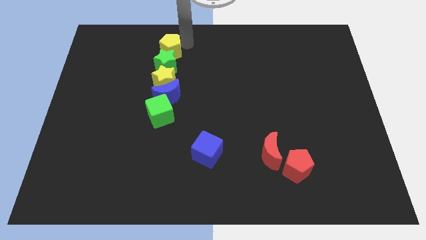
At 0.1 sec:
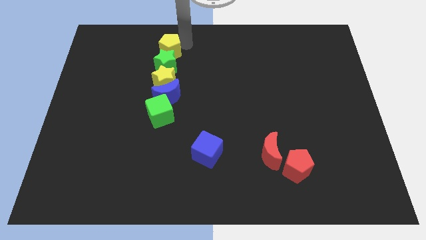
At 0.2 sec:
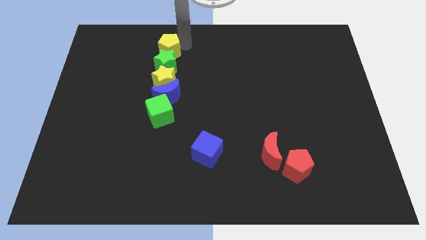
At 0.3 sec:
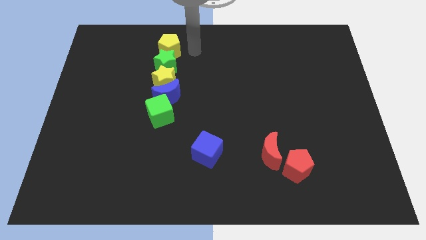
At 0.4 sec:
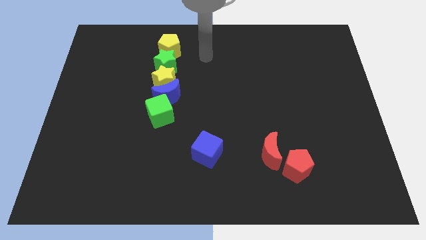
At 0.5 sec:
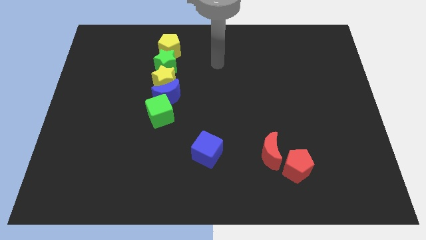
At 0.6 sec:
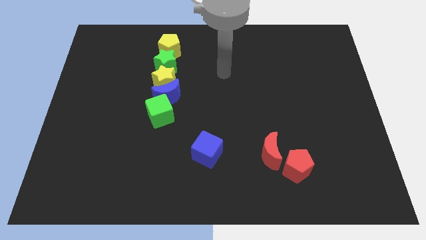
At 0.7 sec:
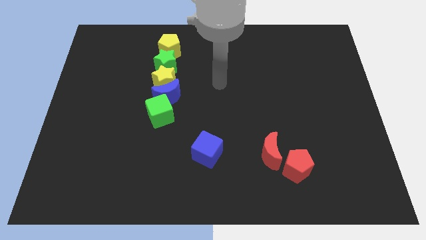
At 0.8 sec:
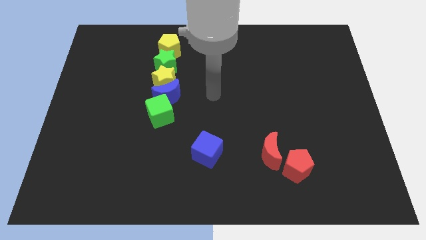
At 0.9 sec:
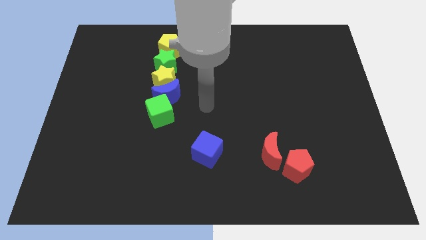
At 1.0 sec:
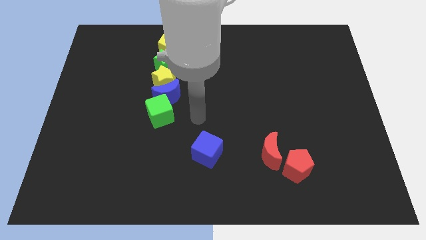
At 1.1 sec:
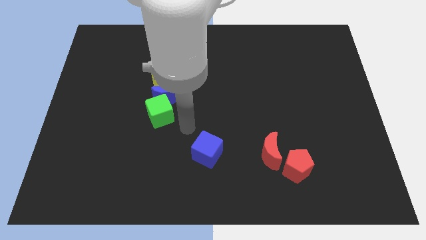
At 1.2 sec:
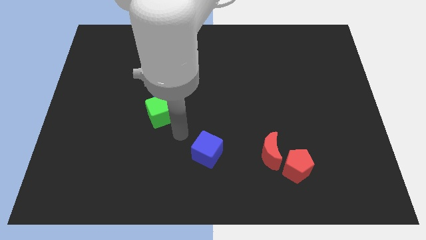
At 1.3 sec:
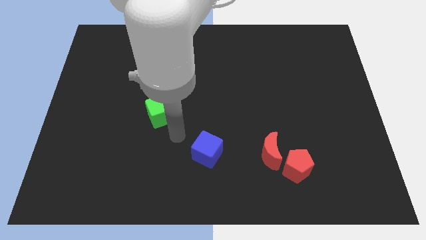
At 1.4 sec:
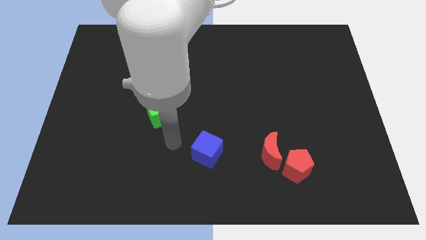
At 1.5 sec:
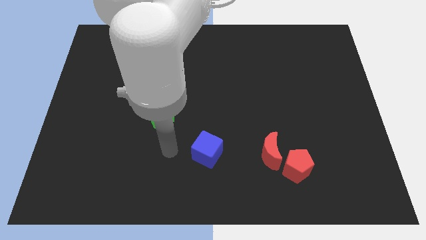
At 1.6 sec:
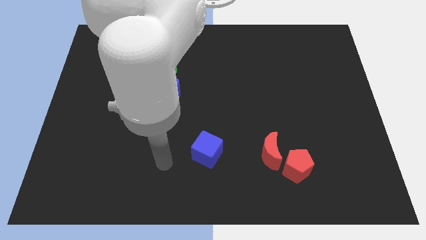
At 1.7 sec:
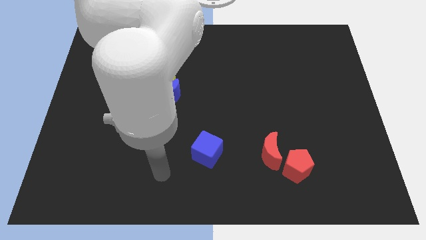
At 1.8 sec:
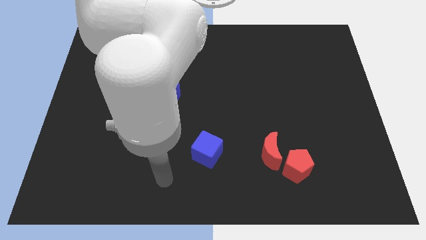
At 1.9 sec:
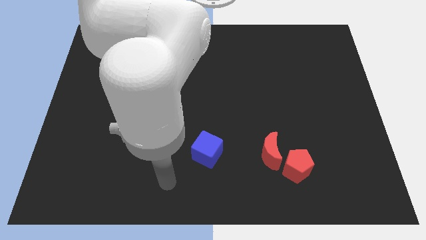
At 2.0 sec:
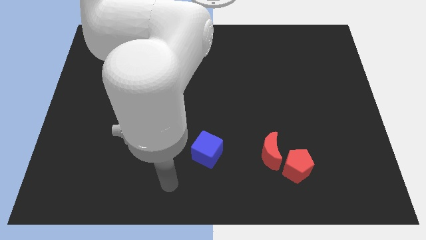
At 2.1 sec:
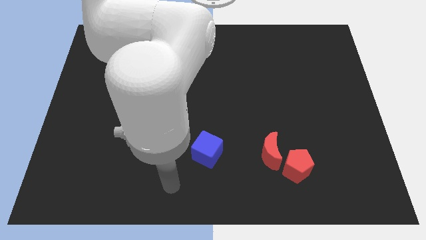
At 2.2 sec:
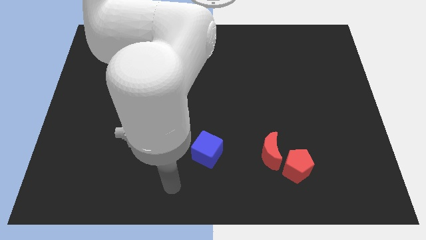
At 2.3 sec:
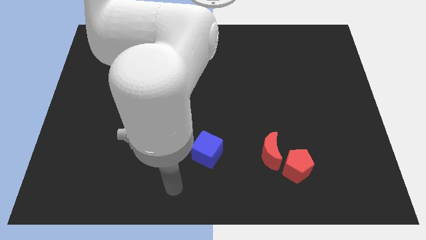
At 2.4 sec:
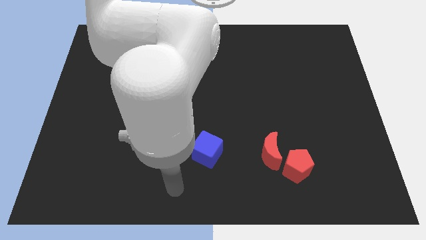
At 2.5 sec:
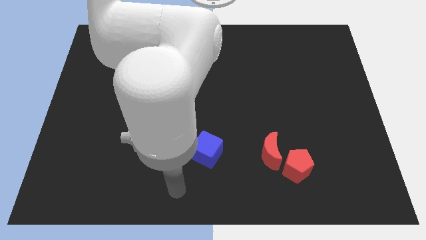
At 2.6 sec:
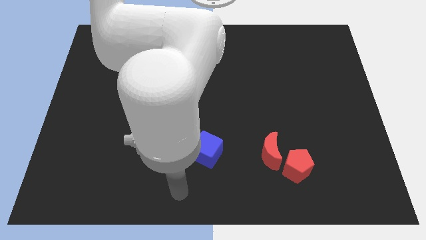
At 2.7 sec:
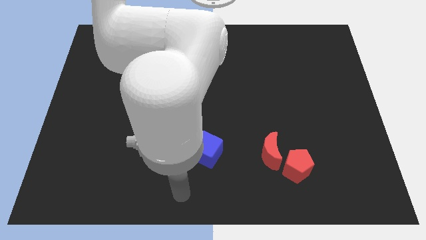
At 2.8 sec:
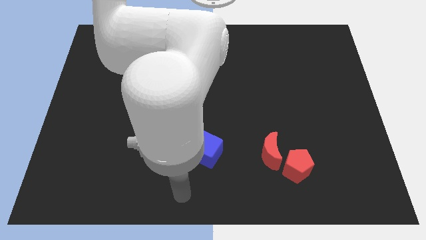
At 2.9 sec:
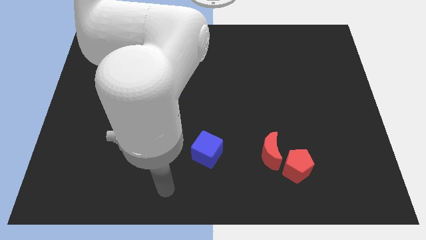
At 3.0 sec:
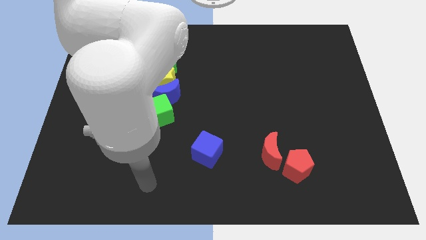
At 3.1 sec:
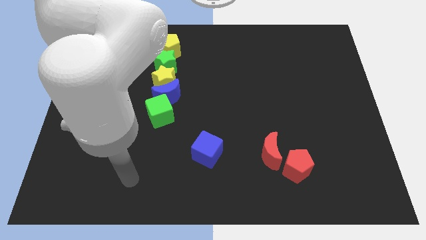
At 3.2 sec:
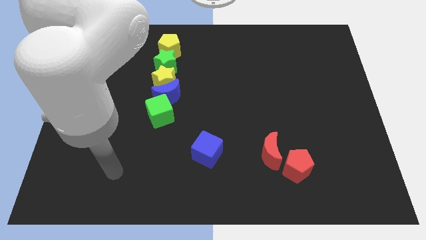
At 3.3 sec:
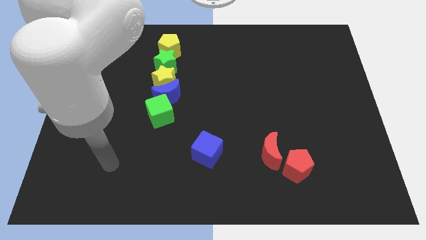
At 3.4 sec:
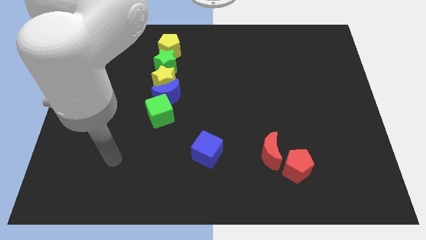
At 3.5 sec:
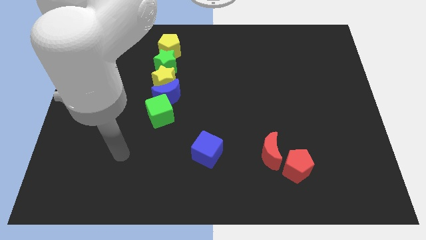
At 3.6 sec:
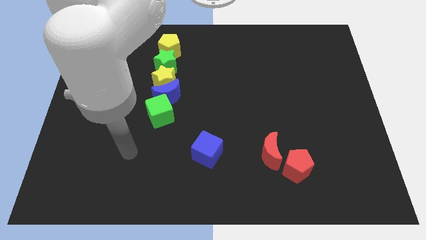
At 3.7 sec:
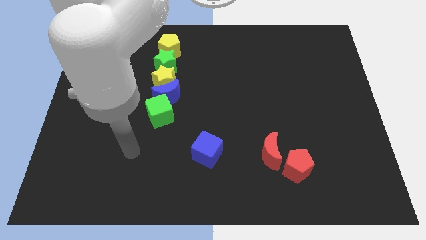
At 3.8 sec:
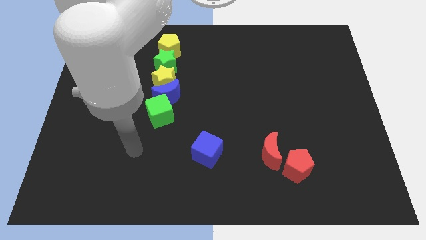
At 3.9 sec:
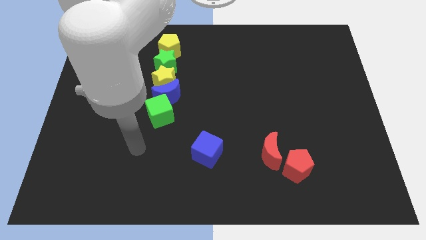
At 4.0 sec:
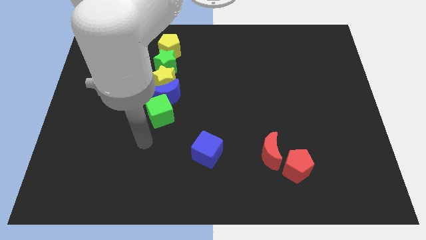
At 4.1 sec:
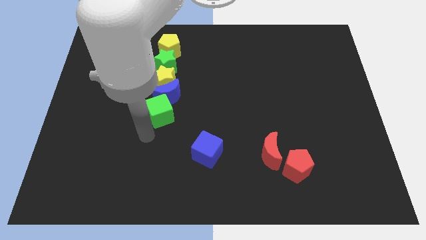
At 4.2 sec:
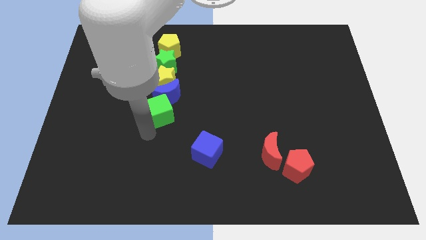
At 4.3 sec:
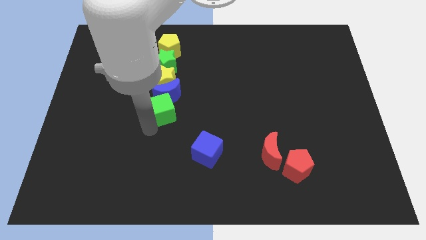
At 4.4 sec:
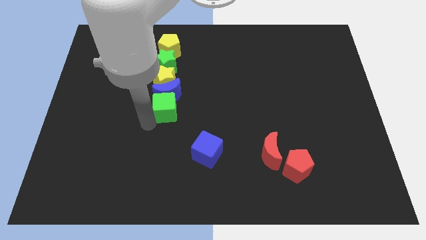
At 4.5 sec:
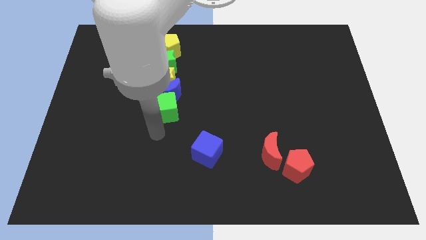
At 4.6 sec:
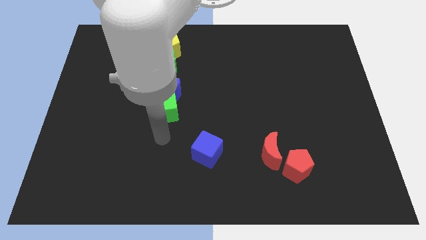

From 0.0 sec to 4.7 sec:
move your arm to the bottom of the green cube

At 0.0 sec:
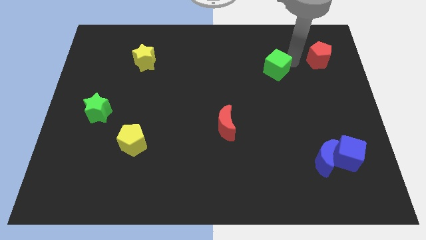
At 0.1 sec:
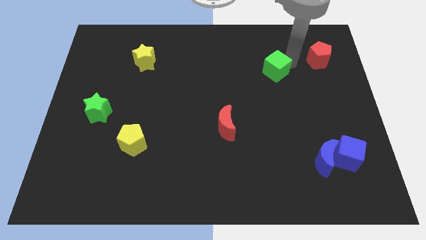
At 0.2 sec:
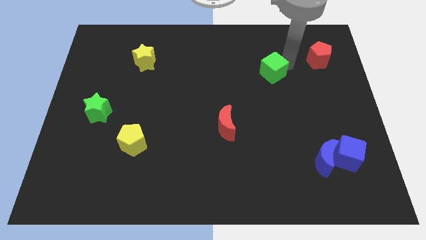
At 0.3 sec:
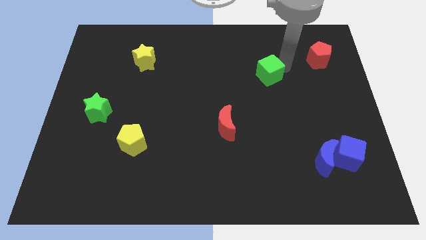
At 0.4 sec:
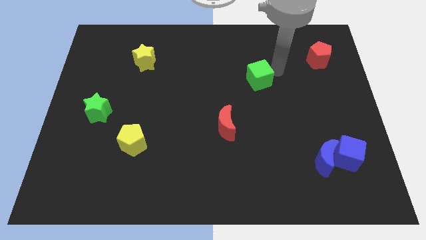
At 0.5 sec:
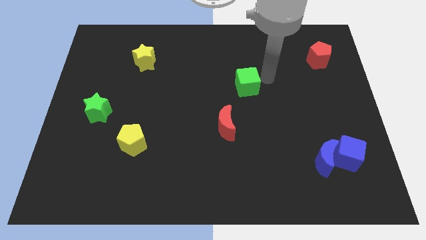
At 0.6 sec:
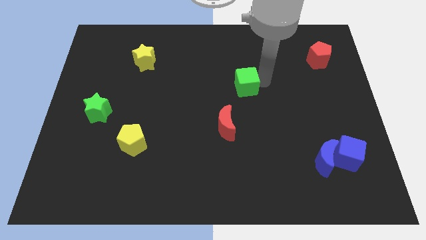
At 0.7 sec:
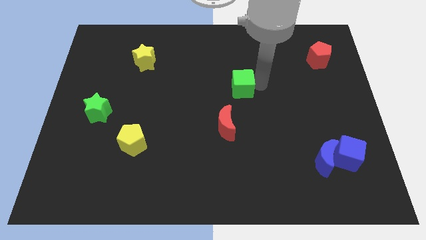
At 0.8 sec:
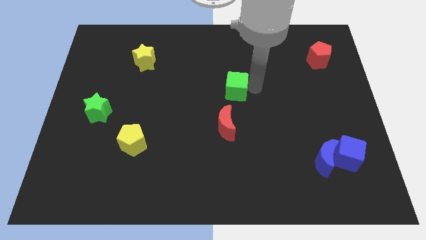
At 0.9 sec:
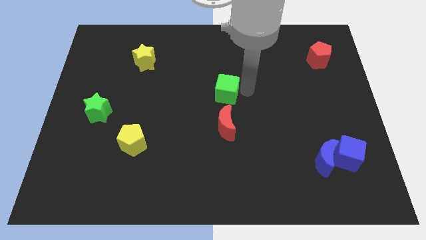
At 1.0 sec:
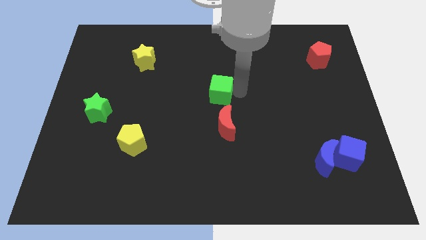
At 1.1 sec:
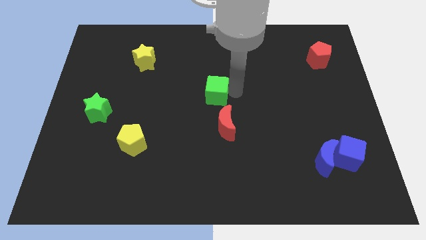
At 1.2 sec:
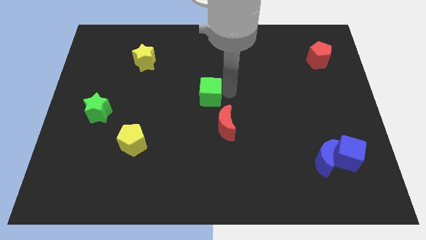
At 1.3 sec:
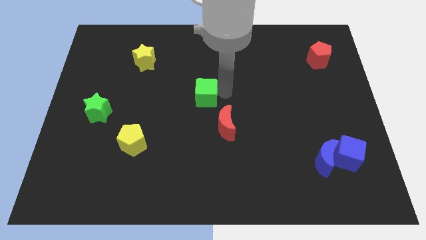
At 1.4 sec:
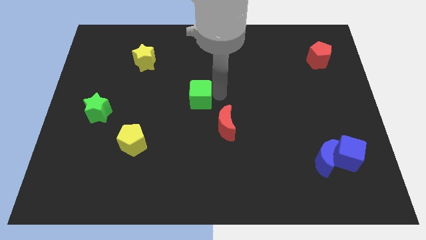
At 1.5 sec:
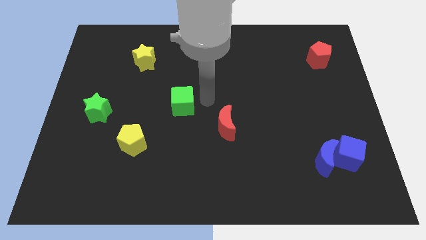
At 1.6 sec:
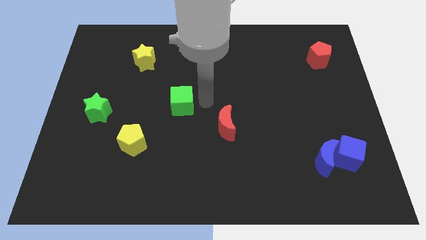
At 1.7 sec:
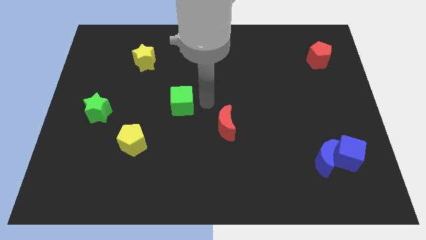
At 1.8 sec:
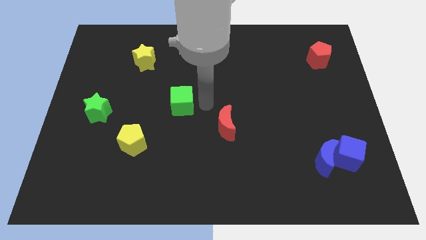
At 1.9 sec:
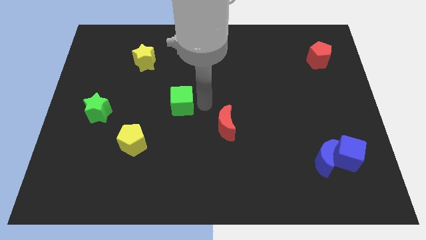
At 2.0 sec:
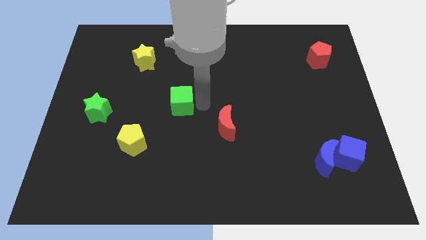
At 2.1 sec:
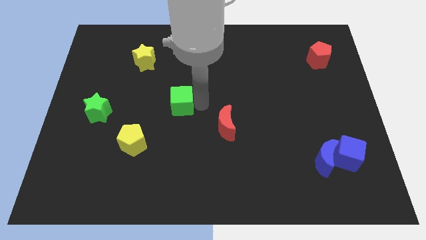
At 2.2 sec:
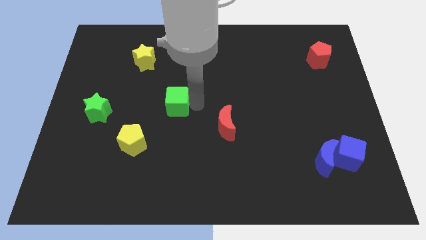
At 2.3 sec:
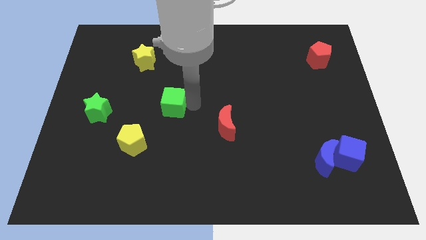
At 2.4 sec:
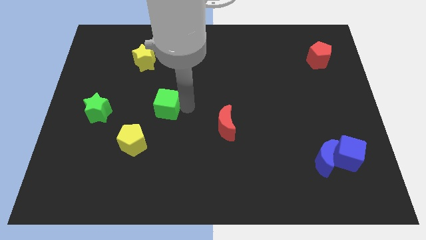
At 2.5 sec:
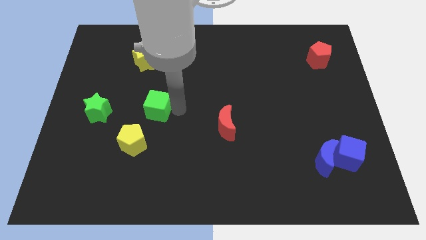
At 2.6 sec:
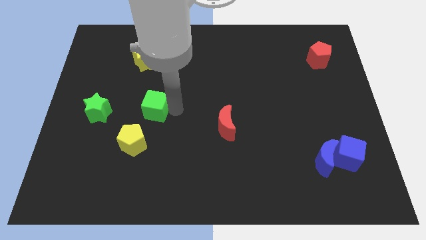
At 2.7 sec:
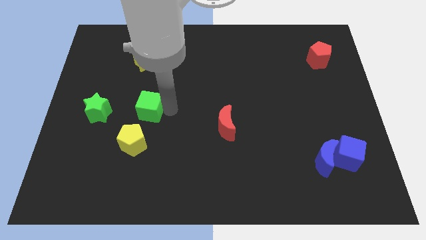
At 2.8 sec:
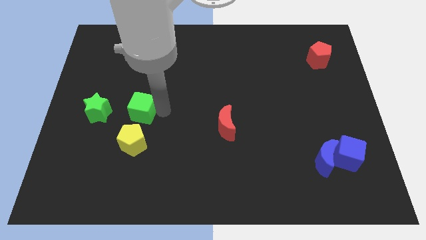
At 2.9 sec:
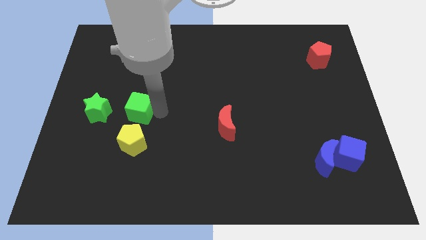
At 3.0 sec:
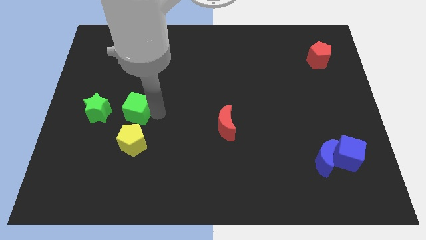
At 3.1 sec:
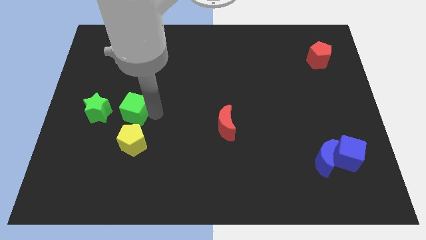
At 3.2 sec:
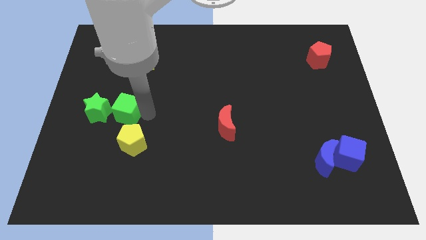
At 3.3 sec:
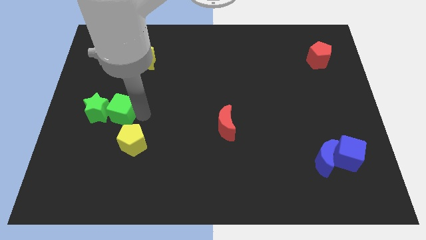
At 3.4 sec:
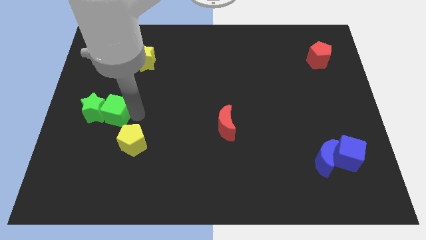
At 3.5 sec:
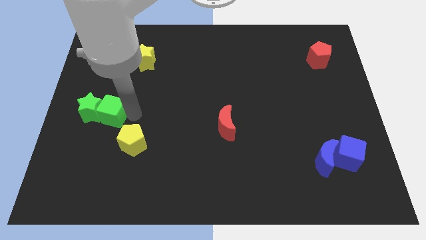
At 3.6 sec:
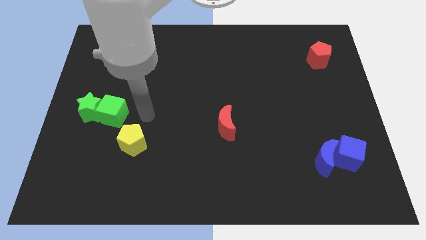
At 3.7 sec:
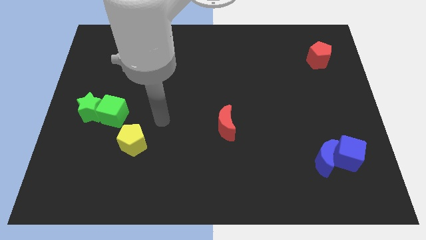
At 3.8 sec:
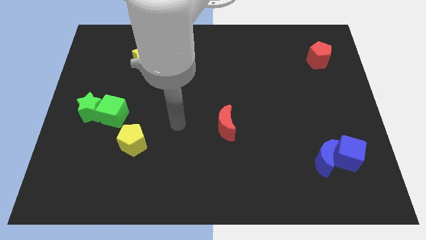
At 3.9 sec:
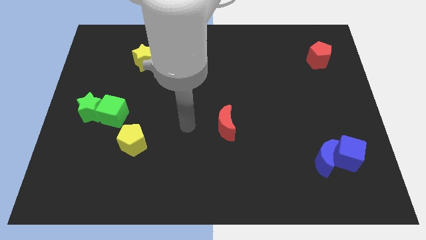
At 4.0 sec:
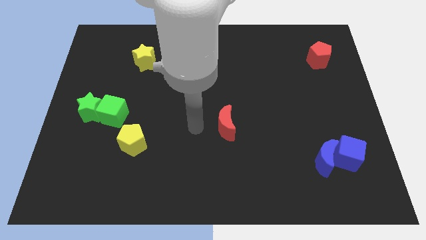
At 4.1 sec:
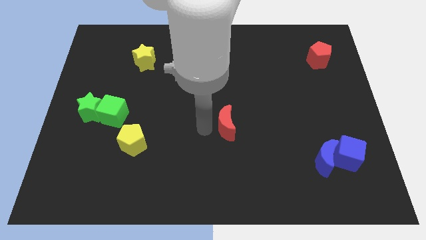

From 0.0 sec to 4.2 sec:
push the green cube to the right of green star
